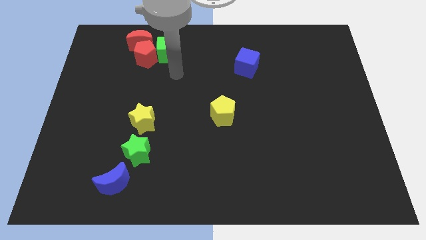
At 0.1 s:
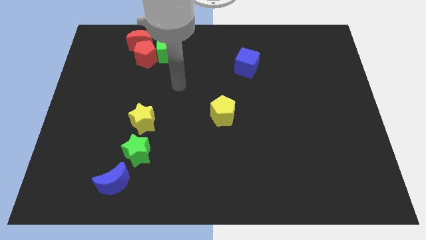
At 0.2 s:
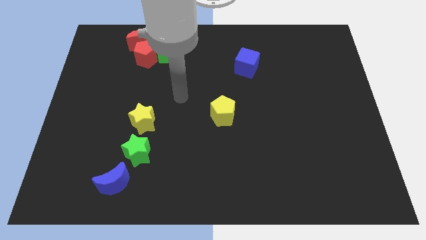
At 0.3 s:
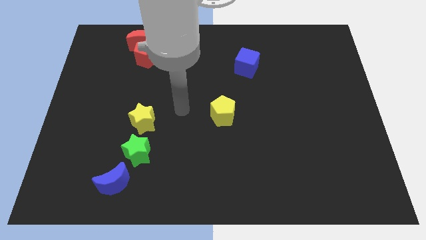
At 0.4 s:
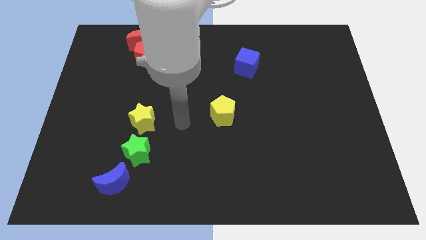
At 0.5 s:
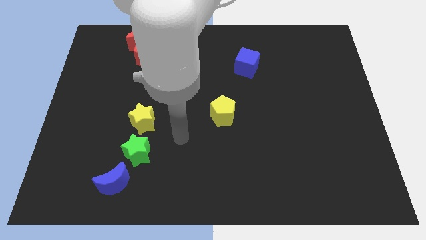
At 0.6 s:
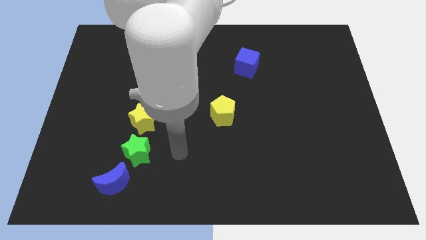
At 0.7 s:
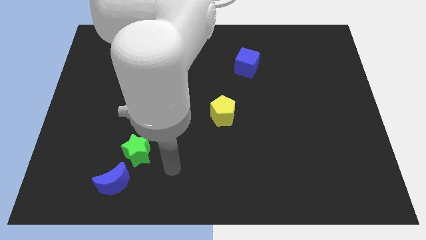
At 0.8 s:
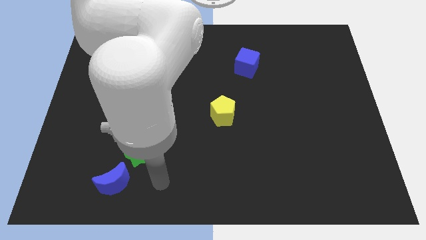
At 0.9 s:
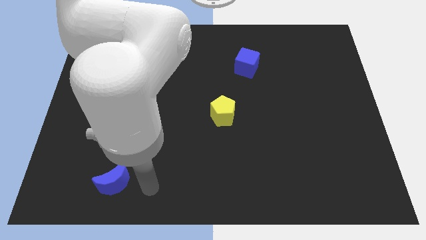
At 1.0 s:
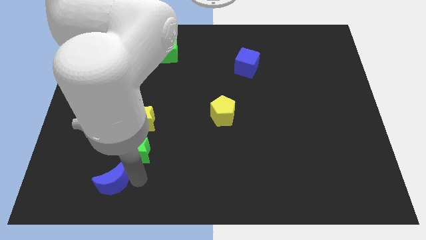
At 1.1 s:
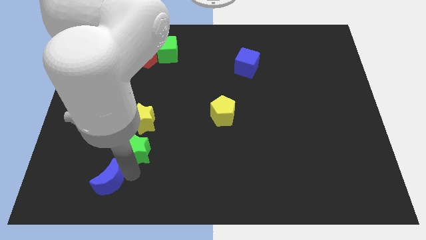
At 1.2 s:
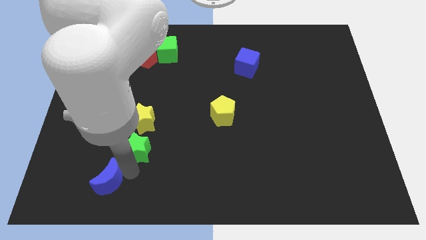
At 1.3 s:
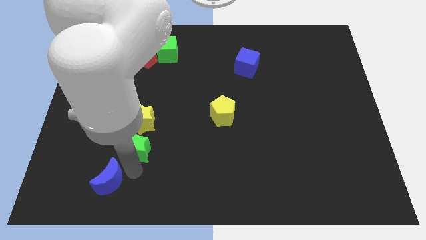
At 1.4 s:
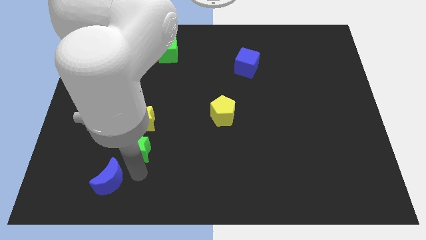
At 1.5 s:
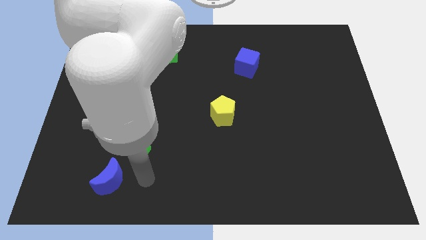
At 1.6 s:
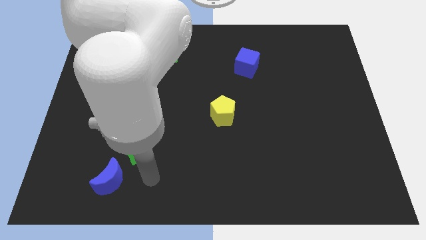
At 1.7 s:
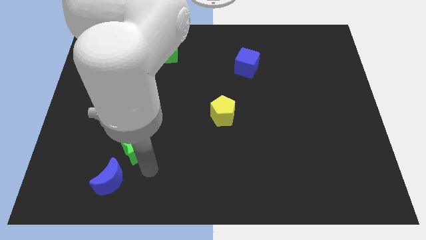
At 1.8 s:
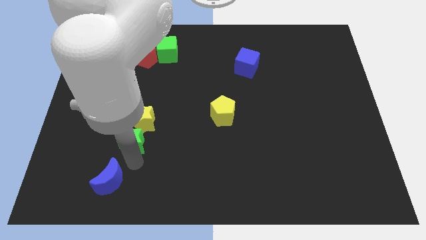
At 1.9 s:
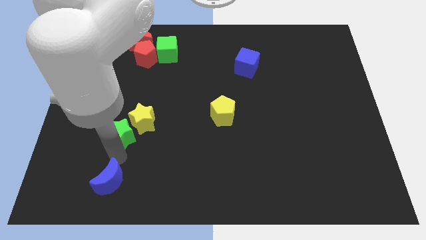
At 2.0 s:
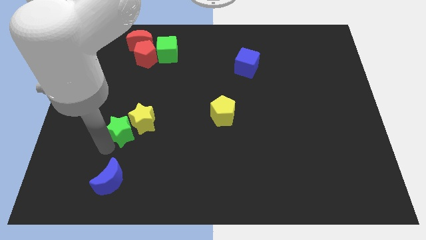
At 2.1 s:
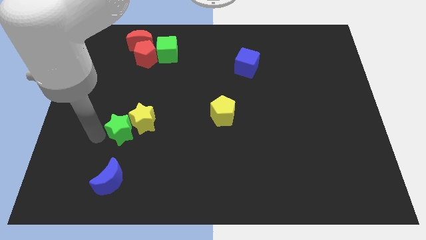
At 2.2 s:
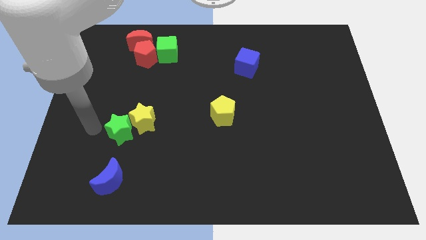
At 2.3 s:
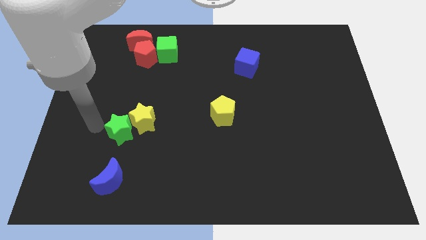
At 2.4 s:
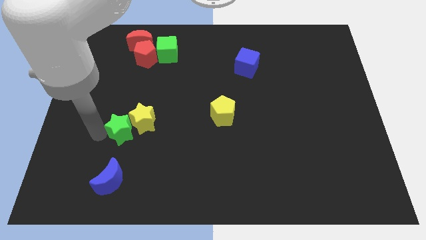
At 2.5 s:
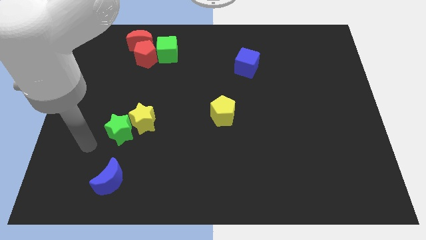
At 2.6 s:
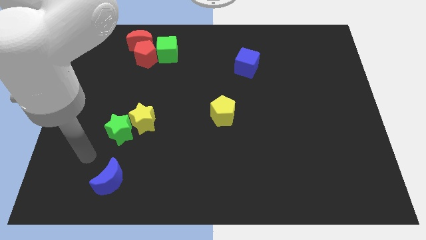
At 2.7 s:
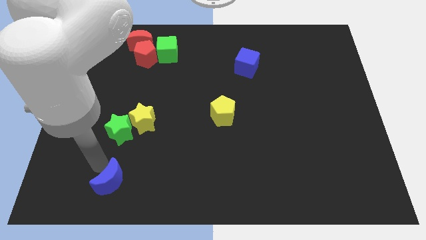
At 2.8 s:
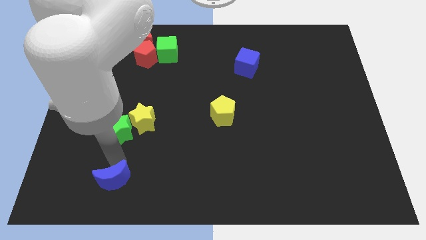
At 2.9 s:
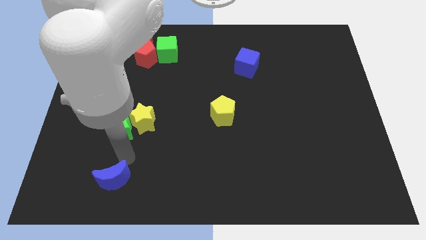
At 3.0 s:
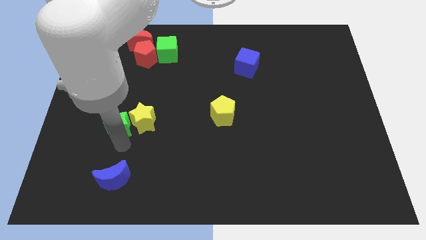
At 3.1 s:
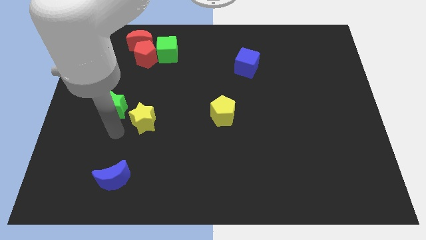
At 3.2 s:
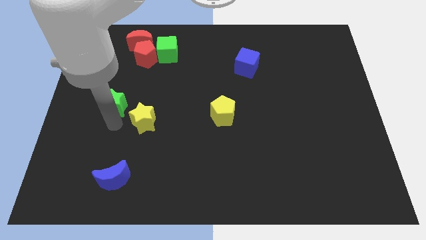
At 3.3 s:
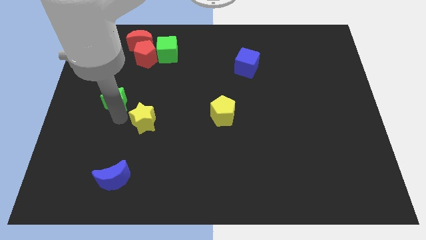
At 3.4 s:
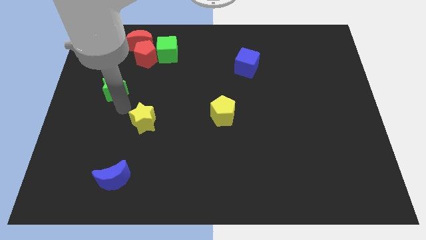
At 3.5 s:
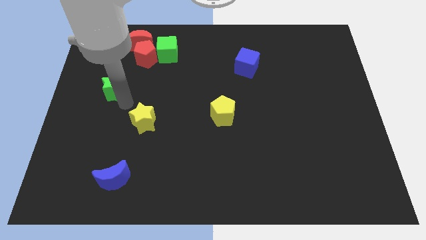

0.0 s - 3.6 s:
push the green star to the top left of the yellow star

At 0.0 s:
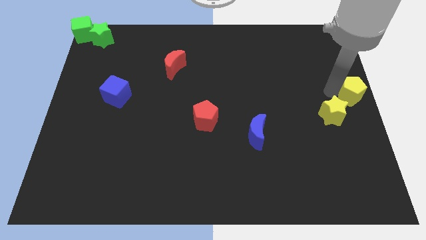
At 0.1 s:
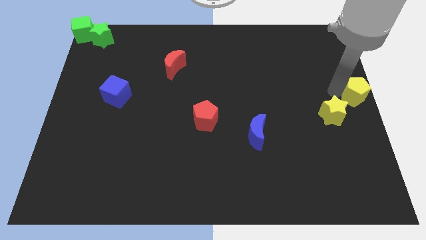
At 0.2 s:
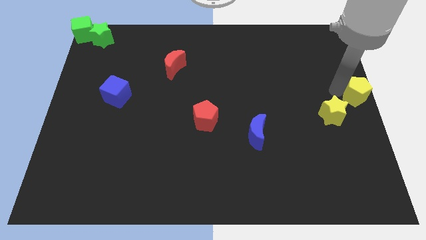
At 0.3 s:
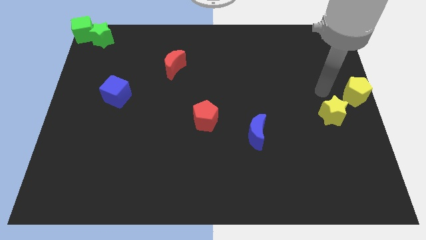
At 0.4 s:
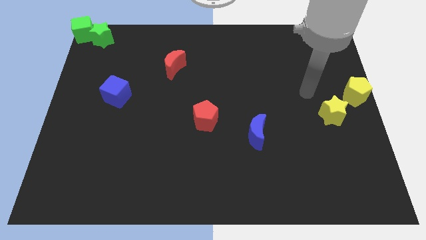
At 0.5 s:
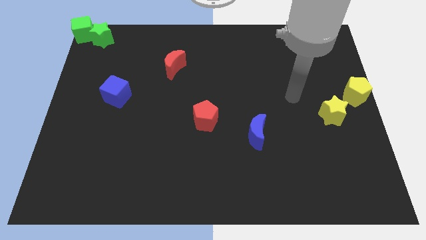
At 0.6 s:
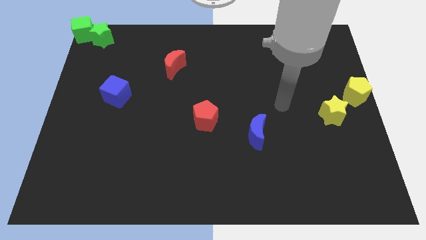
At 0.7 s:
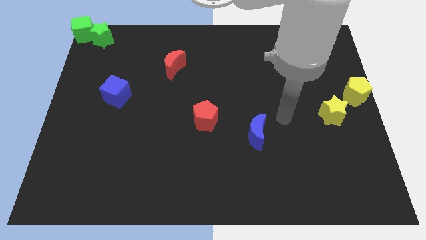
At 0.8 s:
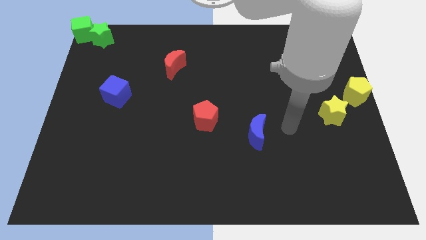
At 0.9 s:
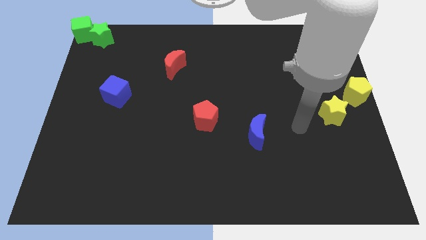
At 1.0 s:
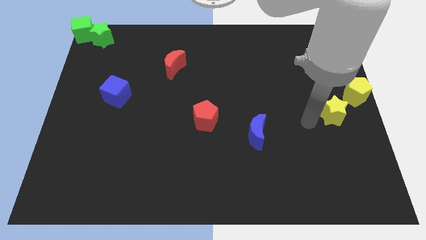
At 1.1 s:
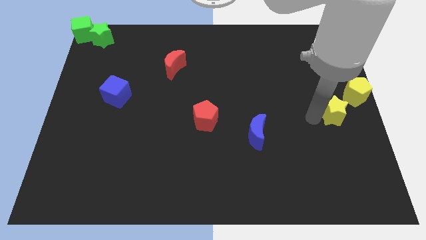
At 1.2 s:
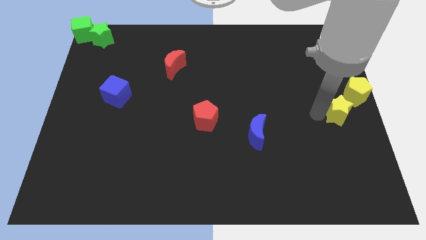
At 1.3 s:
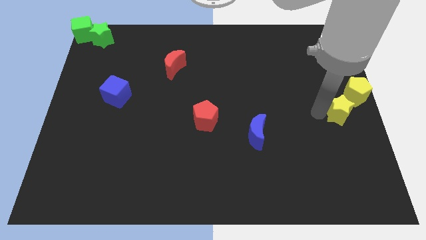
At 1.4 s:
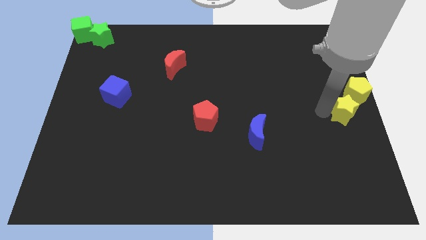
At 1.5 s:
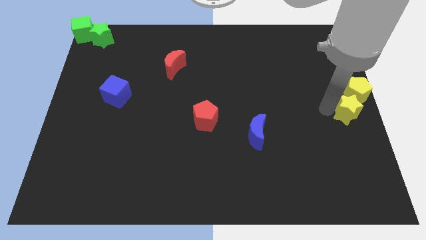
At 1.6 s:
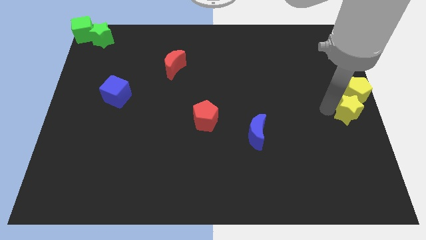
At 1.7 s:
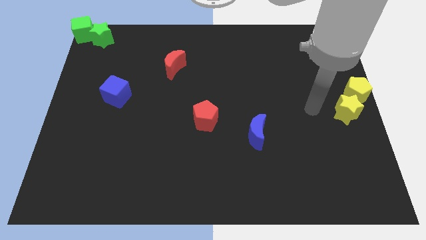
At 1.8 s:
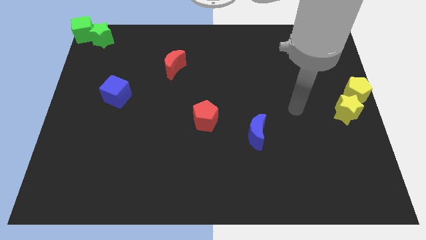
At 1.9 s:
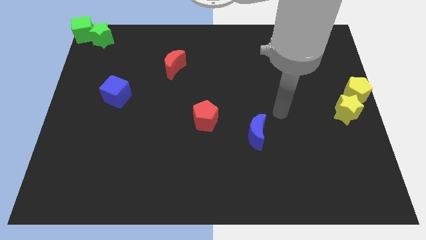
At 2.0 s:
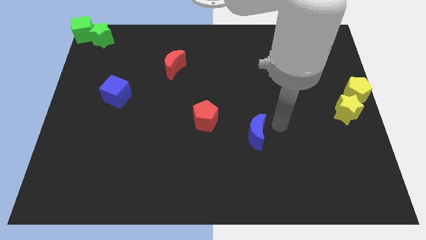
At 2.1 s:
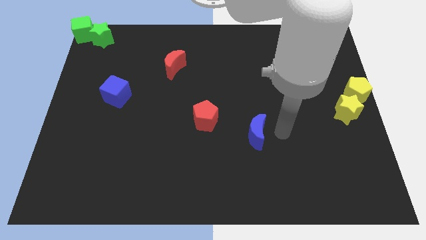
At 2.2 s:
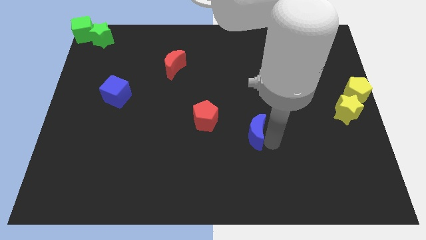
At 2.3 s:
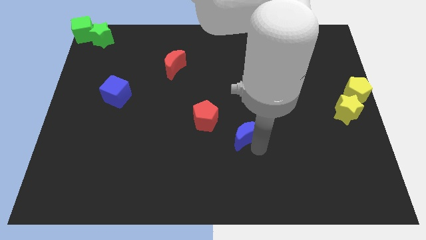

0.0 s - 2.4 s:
move the yellow star close to the yellow pentagon

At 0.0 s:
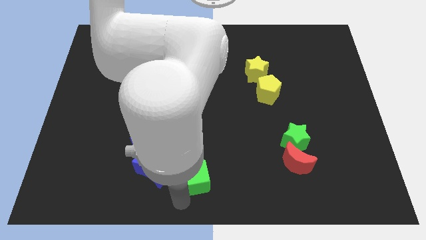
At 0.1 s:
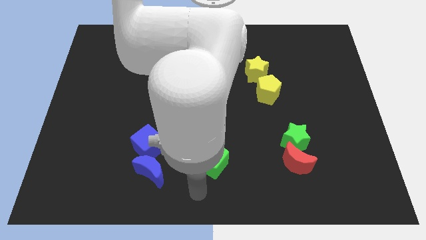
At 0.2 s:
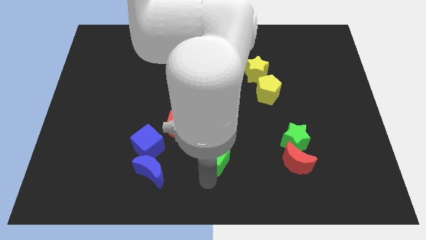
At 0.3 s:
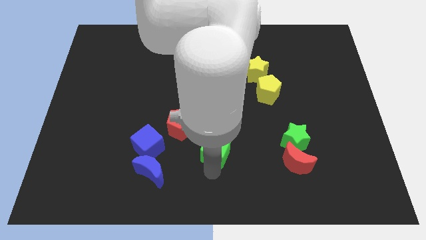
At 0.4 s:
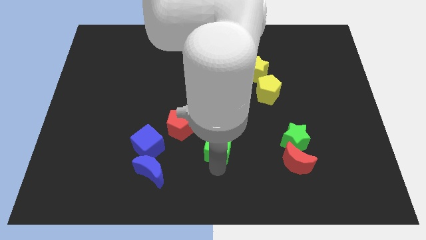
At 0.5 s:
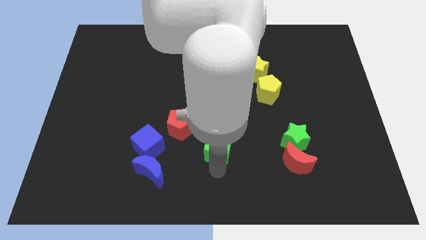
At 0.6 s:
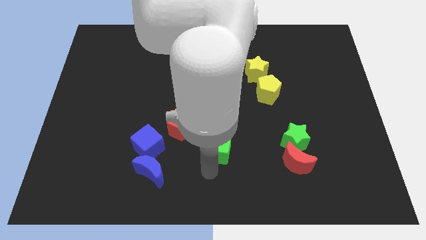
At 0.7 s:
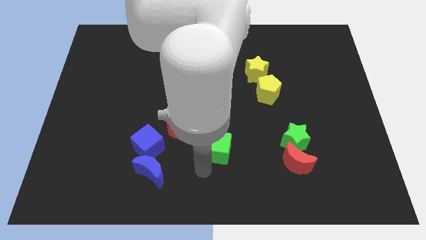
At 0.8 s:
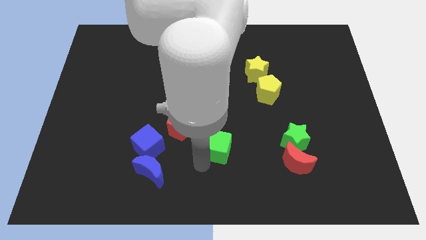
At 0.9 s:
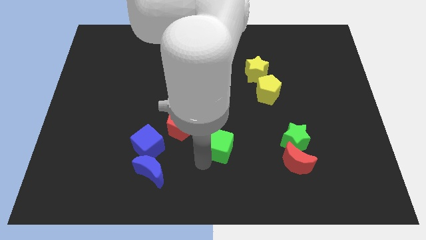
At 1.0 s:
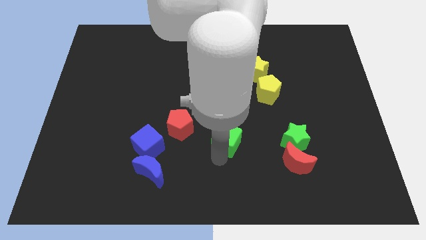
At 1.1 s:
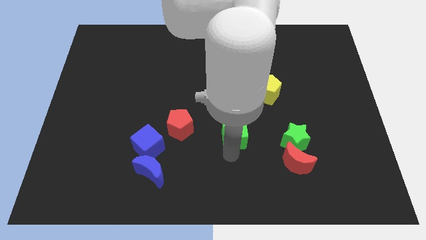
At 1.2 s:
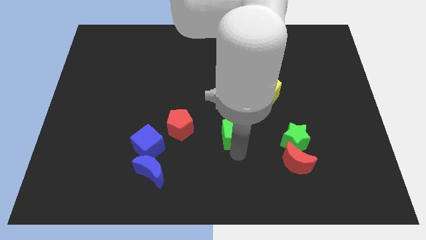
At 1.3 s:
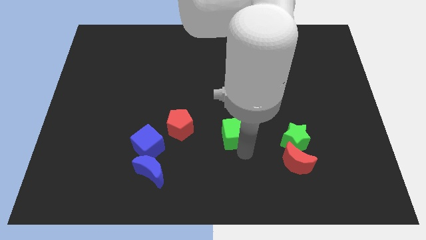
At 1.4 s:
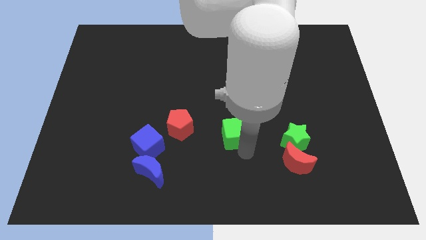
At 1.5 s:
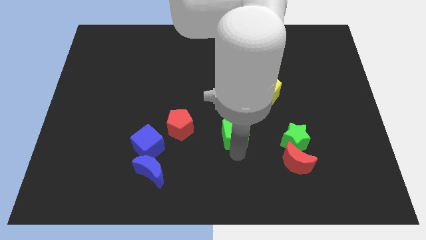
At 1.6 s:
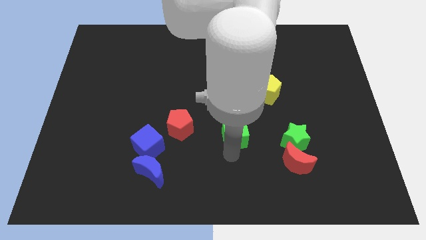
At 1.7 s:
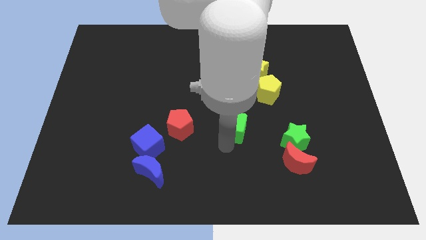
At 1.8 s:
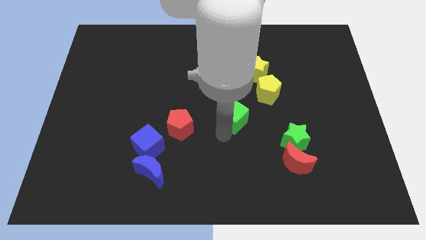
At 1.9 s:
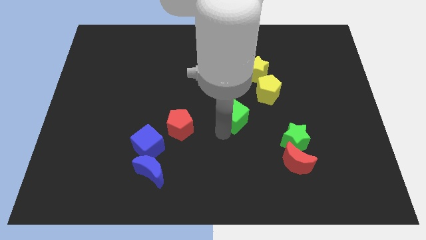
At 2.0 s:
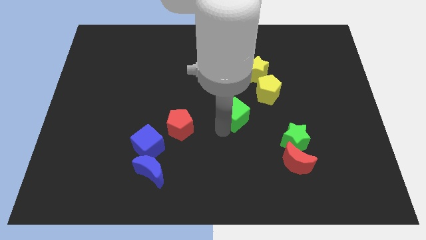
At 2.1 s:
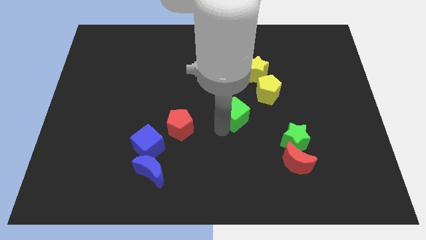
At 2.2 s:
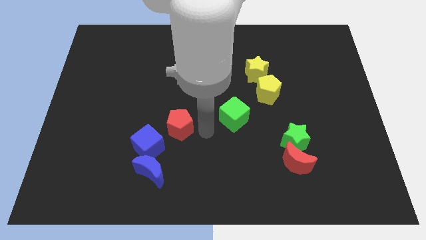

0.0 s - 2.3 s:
move the green cube to the center of board

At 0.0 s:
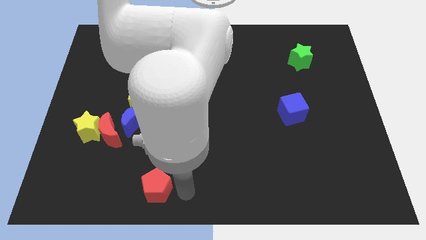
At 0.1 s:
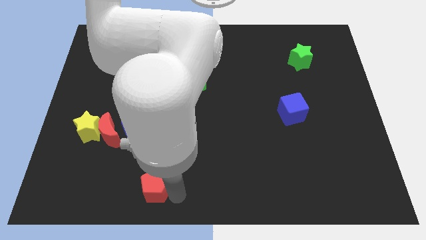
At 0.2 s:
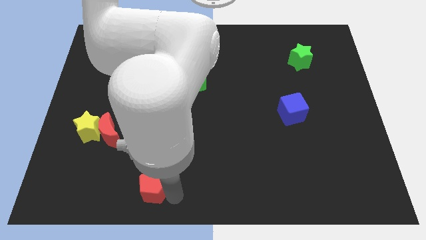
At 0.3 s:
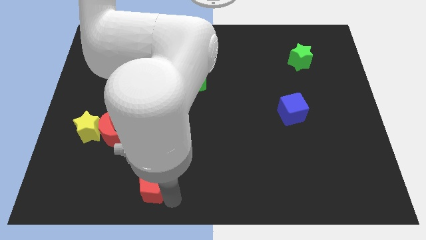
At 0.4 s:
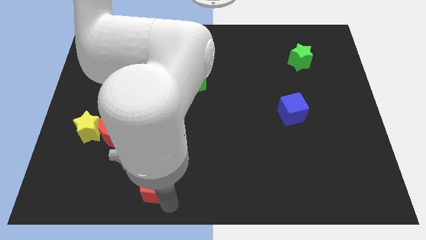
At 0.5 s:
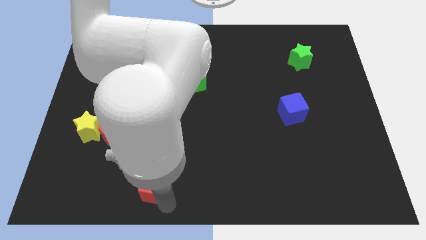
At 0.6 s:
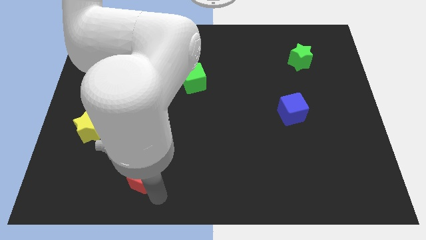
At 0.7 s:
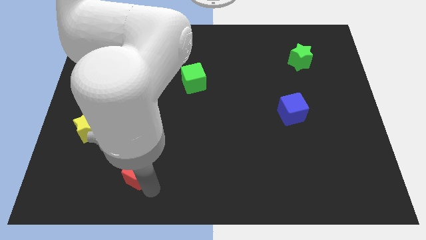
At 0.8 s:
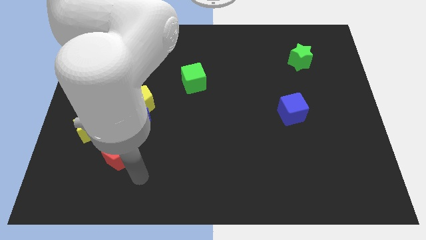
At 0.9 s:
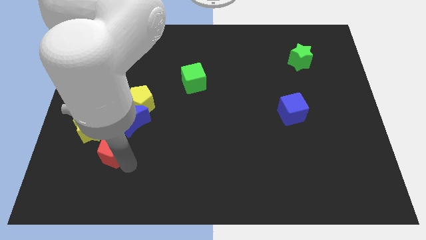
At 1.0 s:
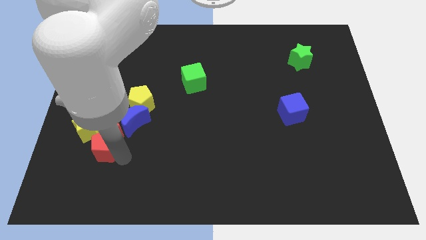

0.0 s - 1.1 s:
move the red pentagon into the red moon
